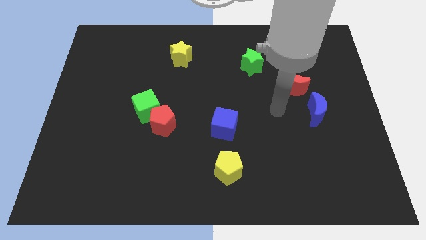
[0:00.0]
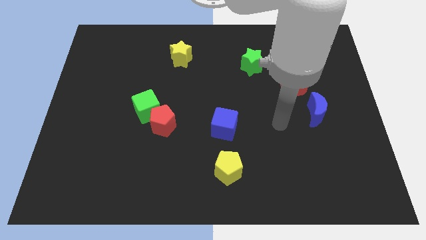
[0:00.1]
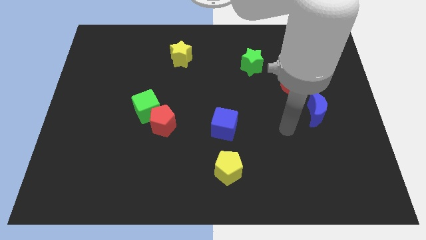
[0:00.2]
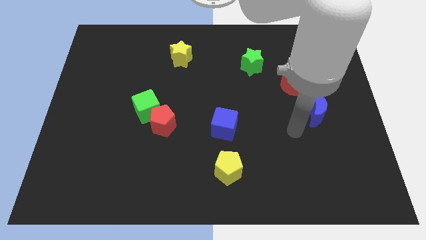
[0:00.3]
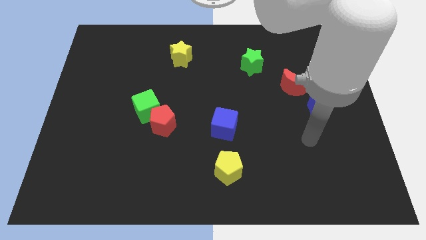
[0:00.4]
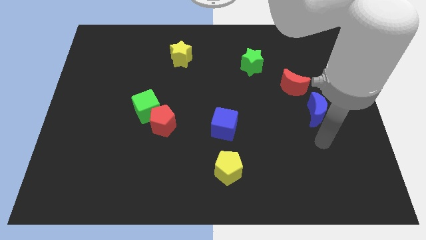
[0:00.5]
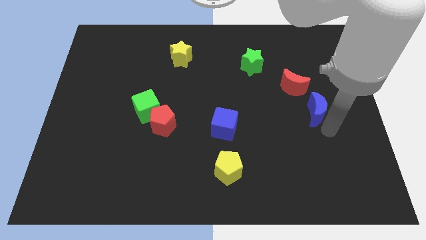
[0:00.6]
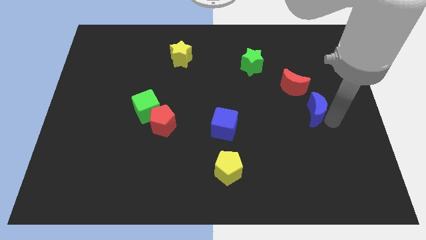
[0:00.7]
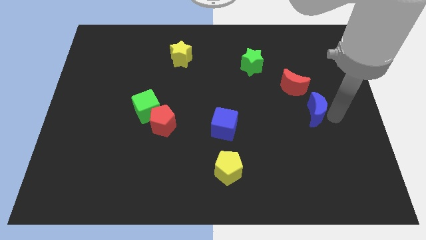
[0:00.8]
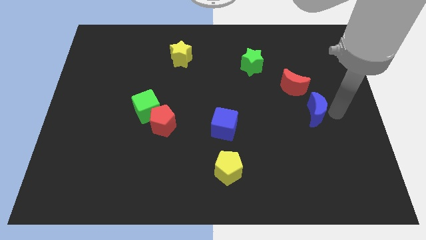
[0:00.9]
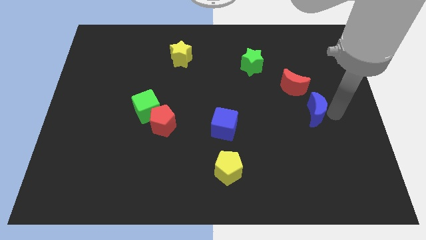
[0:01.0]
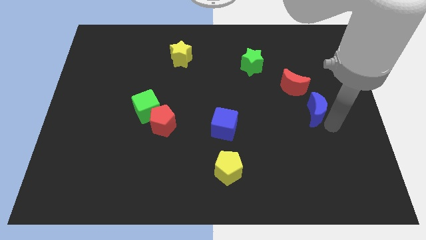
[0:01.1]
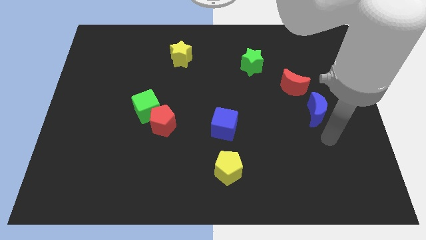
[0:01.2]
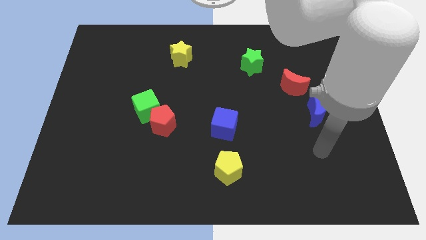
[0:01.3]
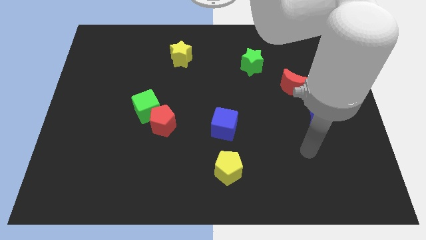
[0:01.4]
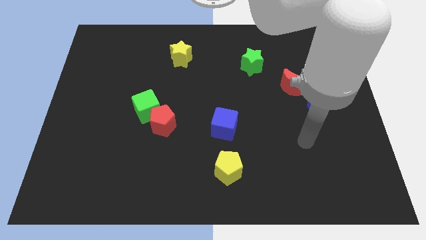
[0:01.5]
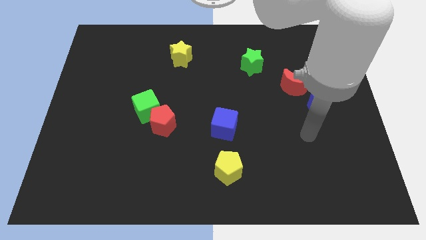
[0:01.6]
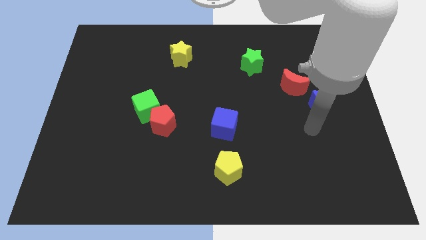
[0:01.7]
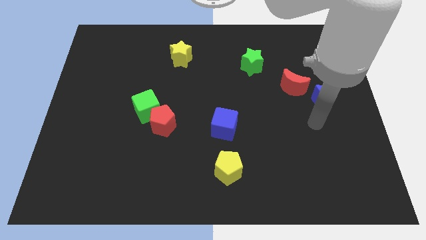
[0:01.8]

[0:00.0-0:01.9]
tap the blue crescent

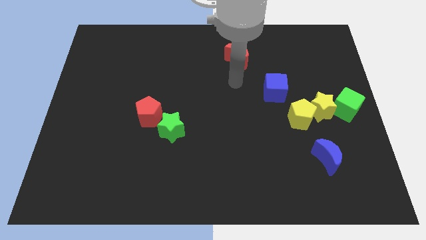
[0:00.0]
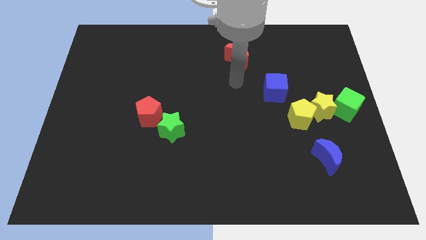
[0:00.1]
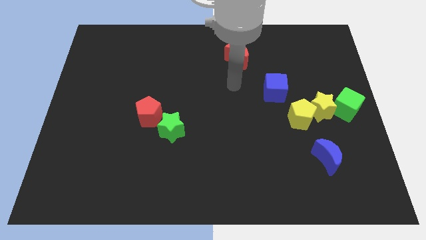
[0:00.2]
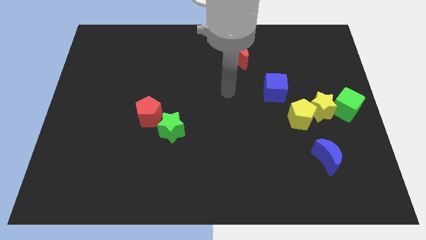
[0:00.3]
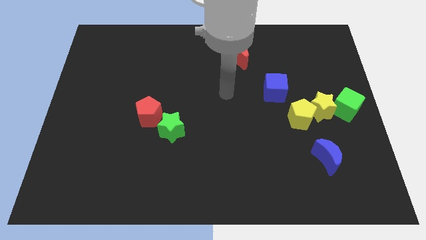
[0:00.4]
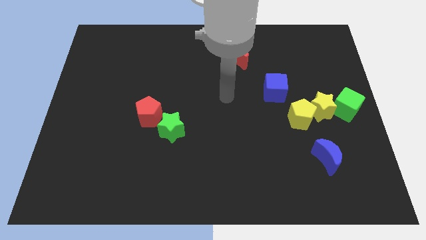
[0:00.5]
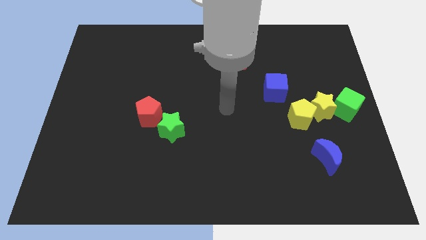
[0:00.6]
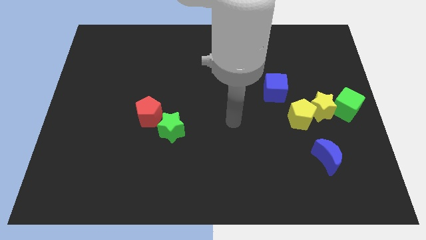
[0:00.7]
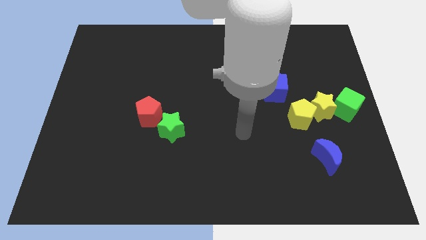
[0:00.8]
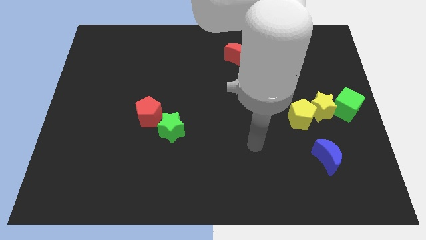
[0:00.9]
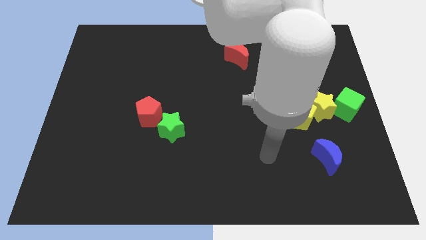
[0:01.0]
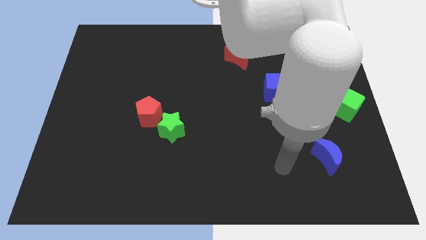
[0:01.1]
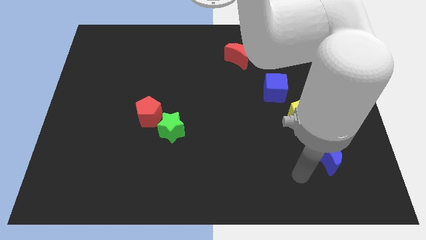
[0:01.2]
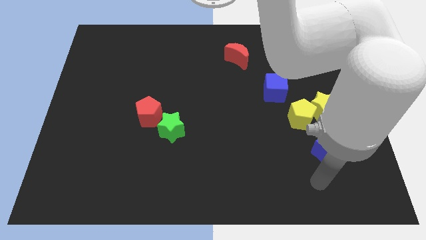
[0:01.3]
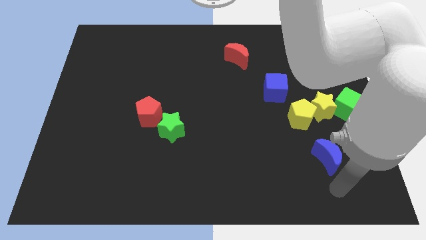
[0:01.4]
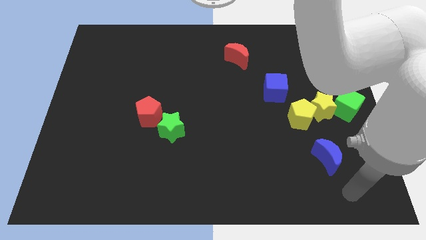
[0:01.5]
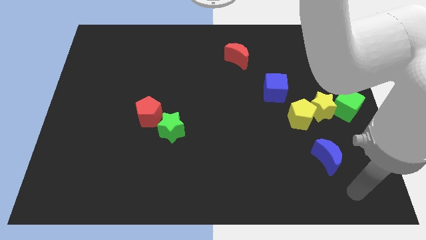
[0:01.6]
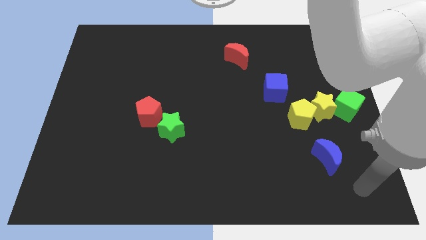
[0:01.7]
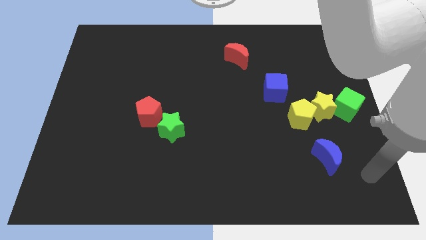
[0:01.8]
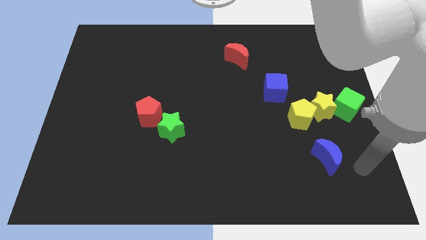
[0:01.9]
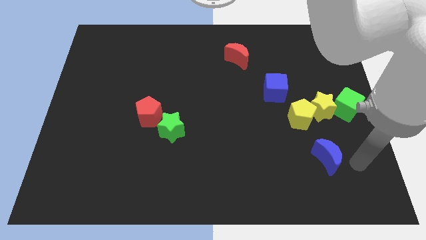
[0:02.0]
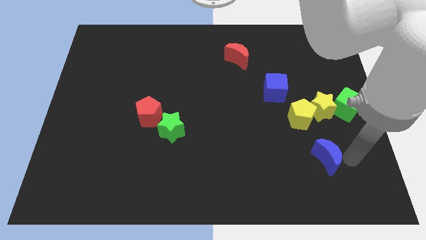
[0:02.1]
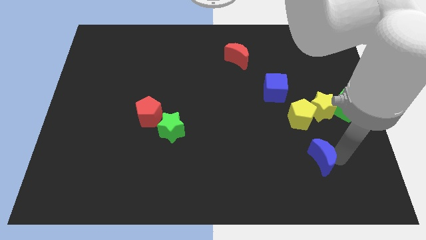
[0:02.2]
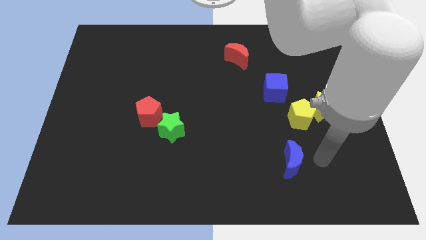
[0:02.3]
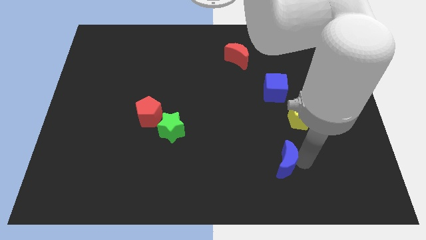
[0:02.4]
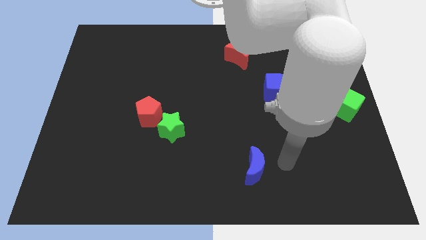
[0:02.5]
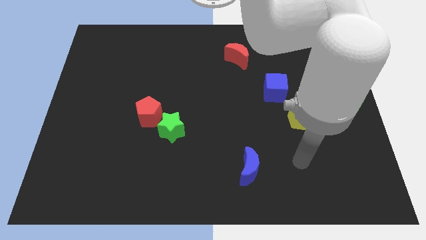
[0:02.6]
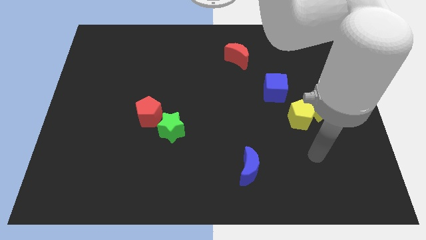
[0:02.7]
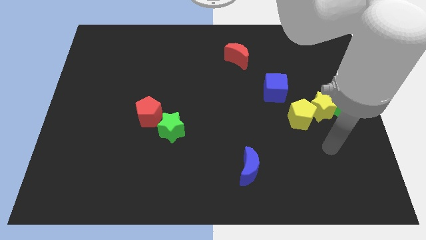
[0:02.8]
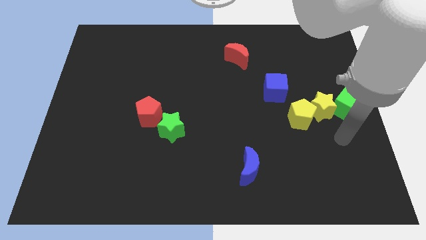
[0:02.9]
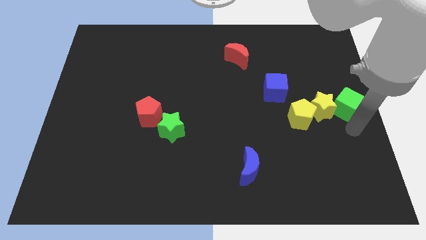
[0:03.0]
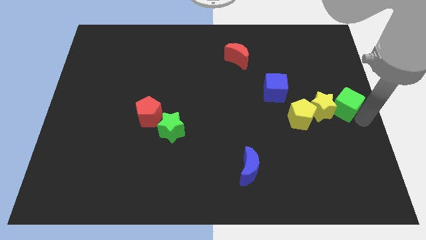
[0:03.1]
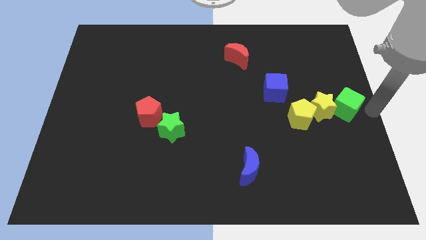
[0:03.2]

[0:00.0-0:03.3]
move blue crescent towards the bottom center of board

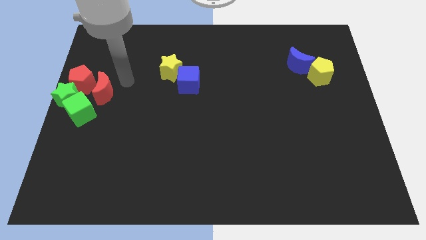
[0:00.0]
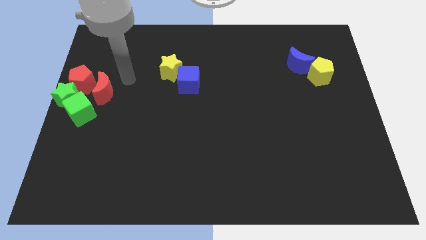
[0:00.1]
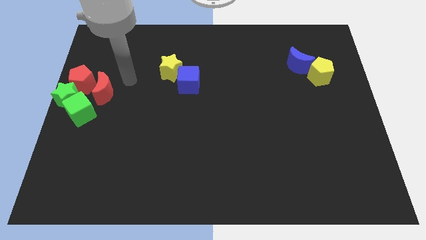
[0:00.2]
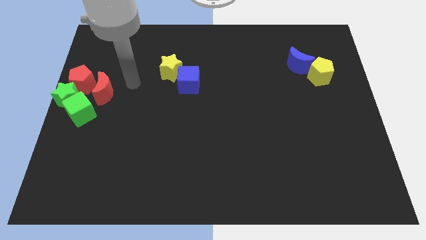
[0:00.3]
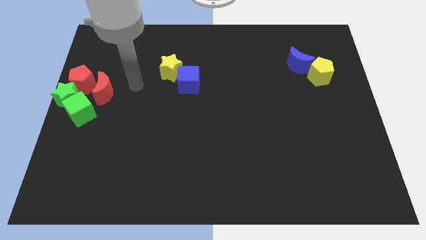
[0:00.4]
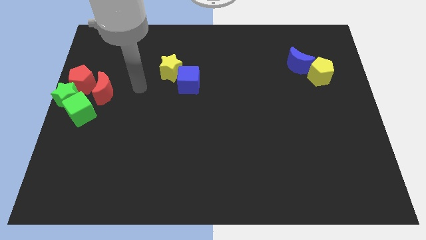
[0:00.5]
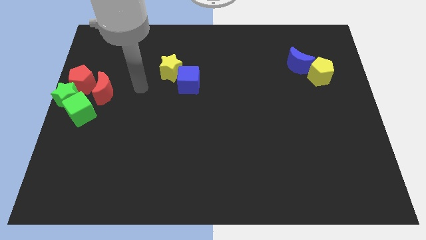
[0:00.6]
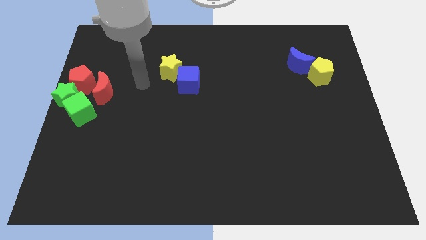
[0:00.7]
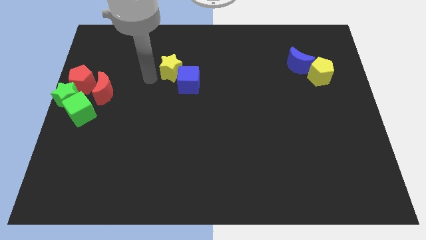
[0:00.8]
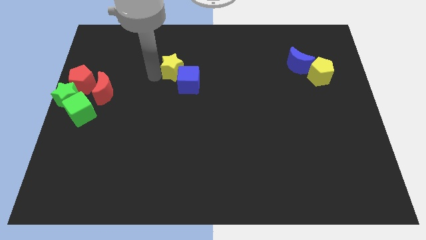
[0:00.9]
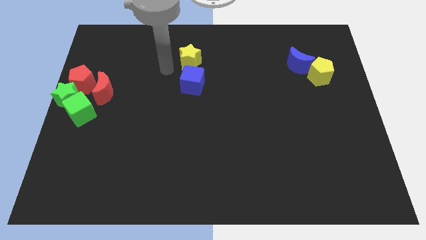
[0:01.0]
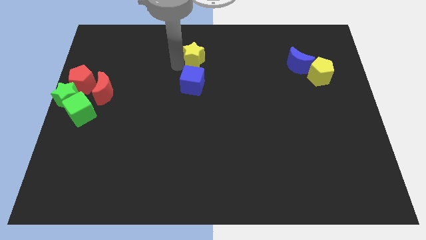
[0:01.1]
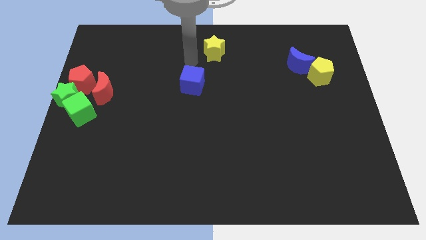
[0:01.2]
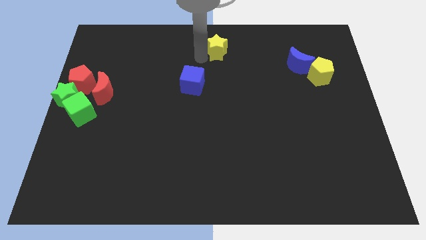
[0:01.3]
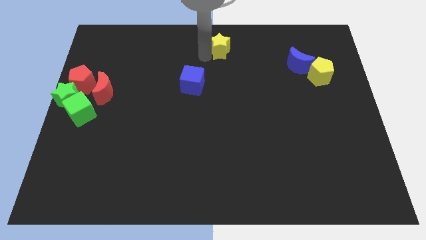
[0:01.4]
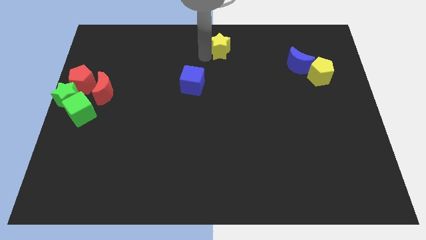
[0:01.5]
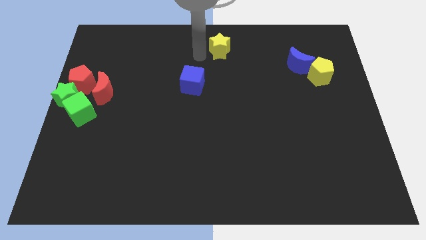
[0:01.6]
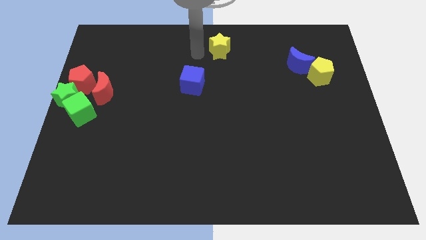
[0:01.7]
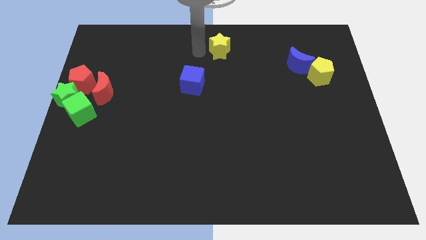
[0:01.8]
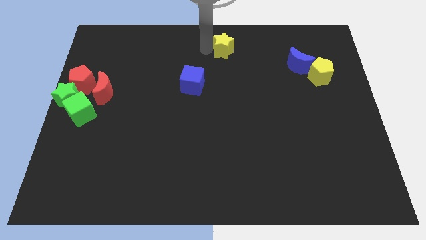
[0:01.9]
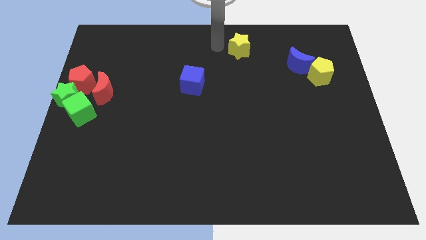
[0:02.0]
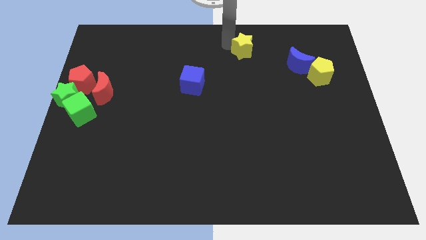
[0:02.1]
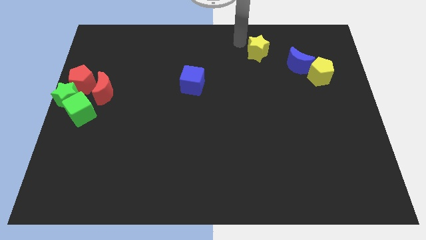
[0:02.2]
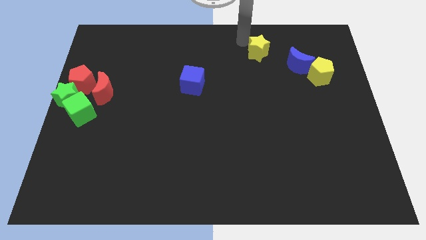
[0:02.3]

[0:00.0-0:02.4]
move yellow star away from the blue cube

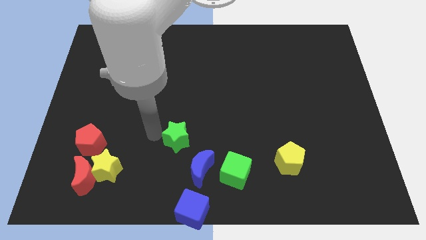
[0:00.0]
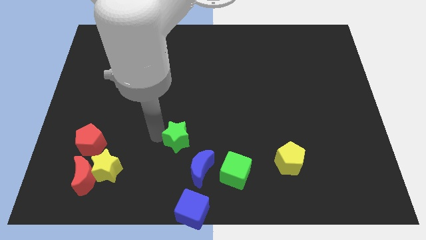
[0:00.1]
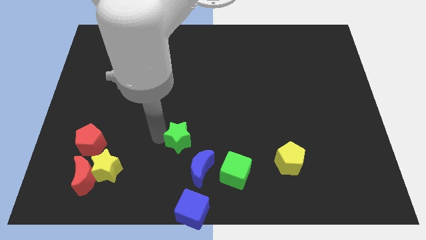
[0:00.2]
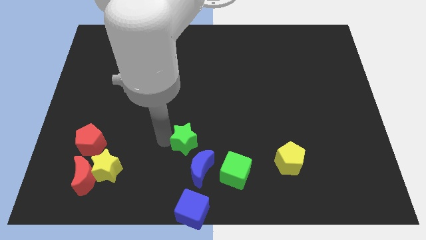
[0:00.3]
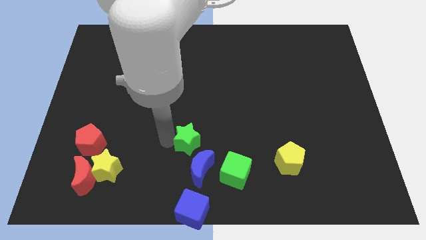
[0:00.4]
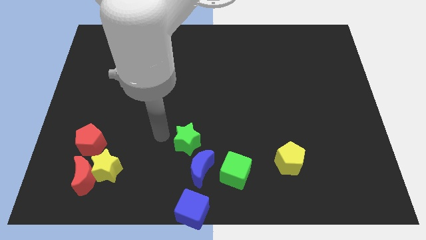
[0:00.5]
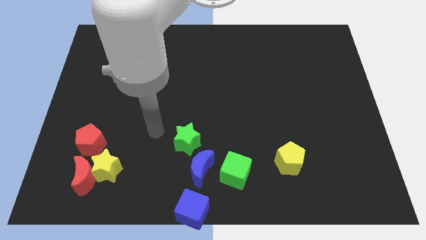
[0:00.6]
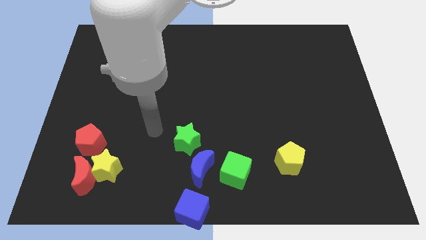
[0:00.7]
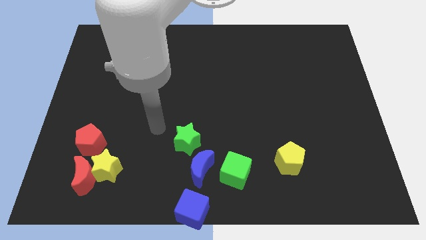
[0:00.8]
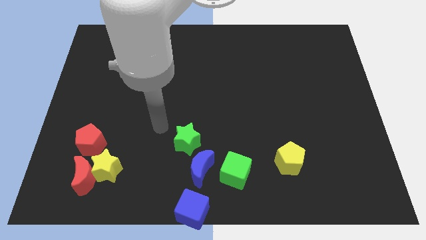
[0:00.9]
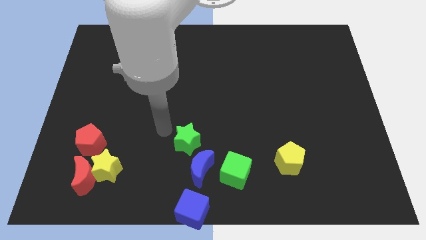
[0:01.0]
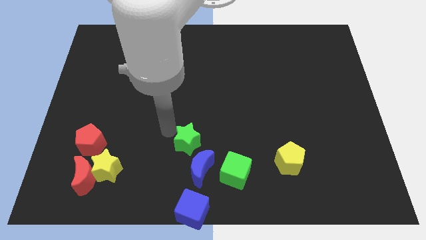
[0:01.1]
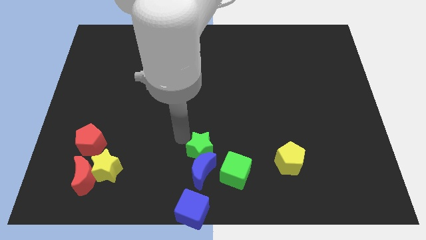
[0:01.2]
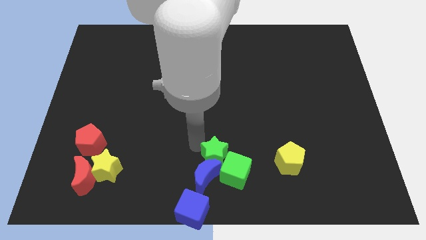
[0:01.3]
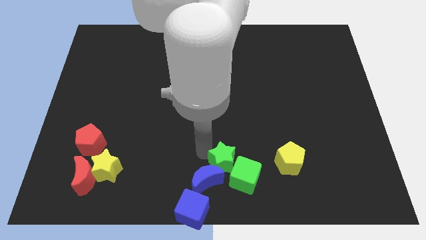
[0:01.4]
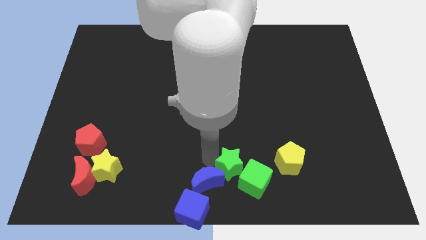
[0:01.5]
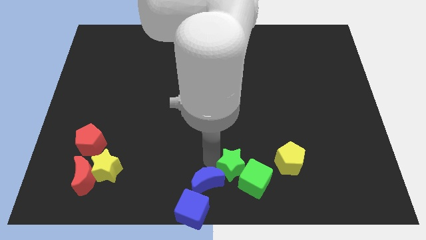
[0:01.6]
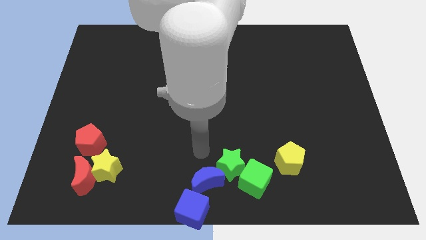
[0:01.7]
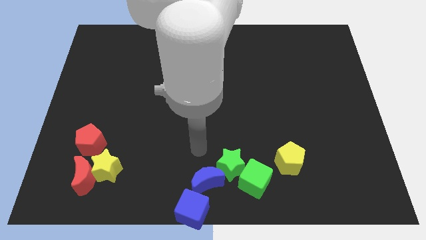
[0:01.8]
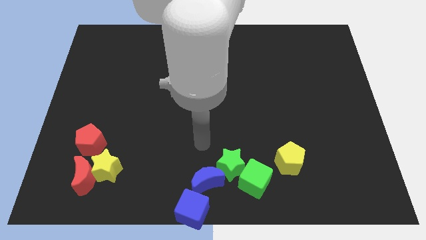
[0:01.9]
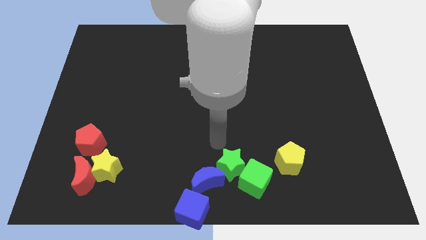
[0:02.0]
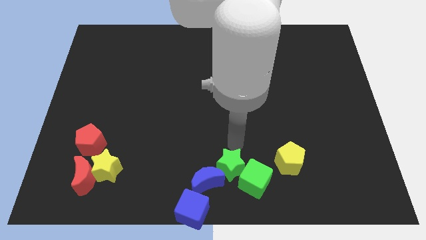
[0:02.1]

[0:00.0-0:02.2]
push the green star into the green cube
